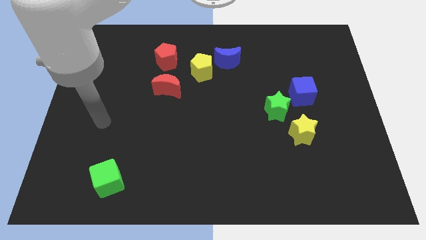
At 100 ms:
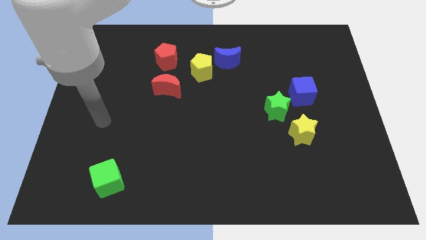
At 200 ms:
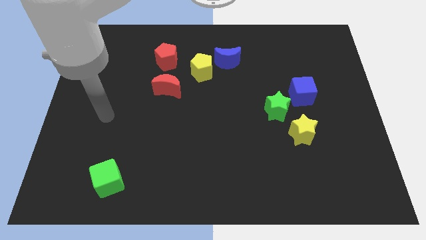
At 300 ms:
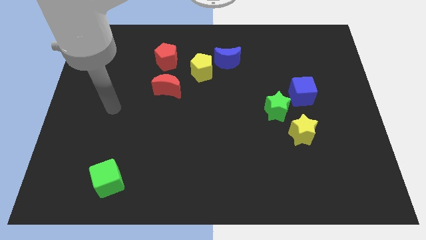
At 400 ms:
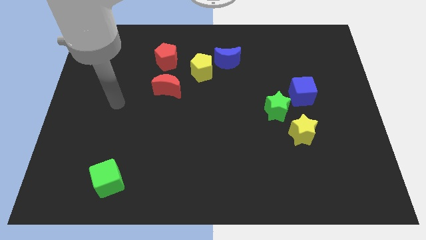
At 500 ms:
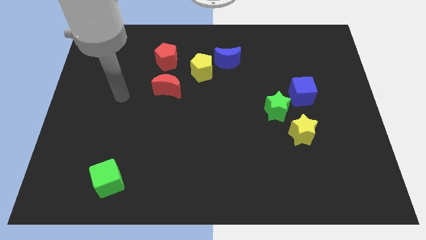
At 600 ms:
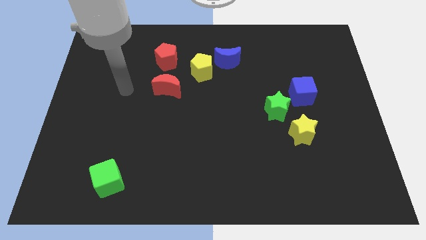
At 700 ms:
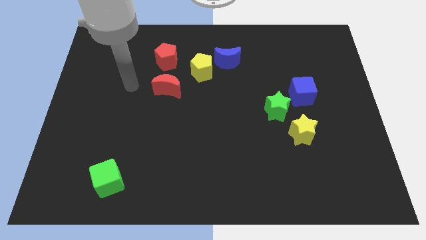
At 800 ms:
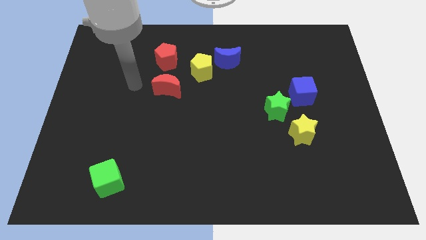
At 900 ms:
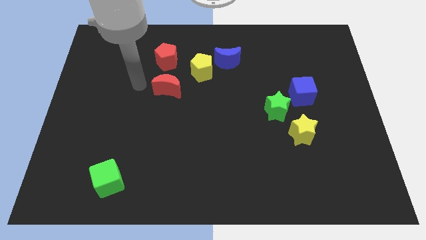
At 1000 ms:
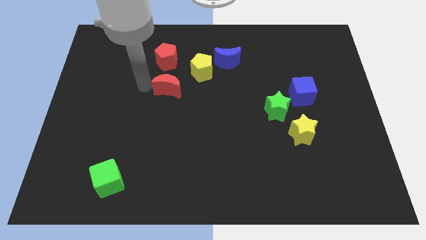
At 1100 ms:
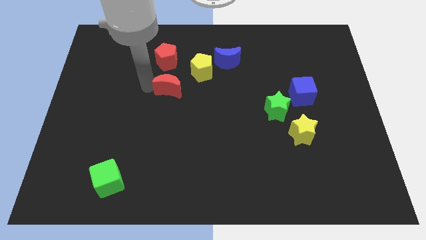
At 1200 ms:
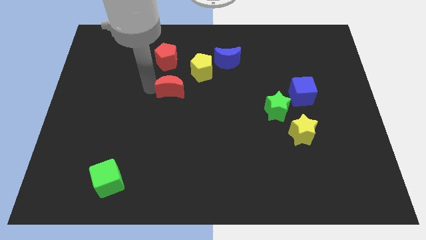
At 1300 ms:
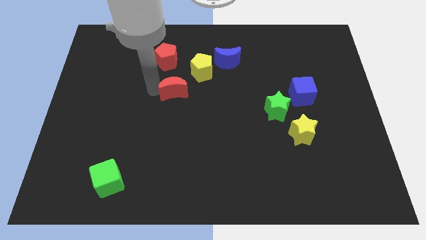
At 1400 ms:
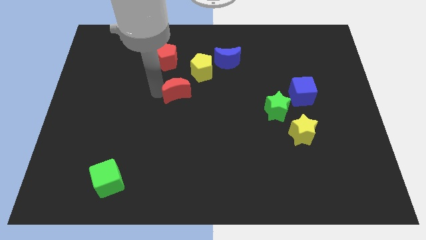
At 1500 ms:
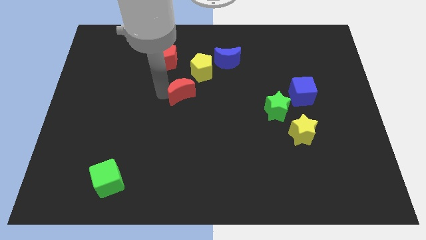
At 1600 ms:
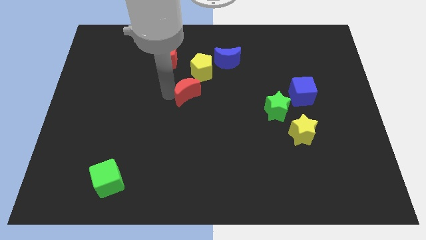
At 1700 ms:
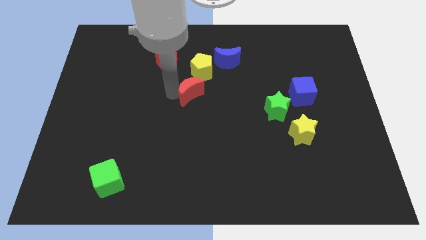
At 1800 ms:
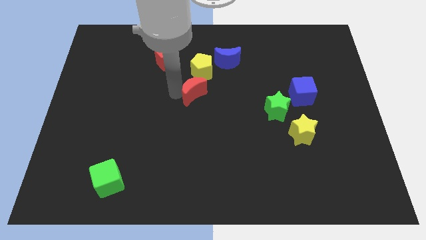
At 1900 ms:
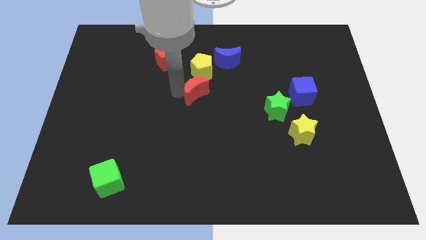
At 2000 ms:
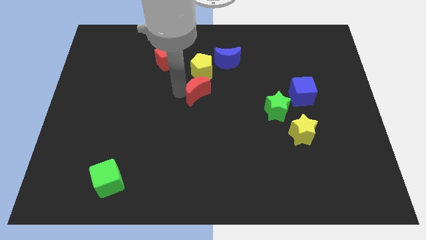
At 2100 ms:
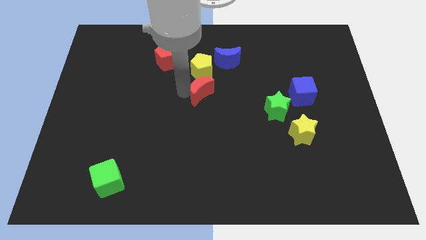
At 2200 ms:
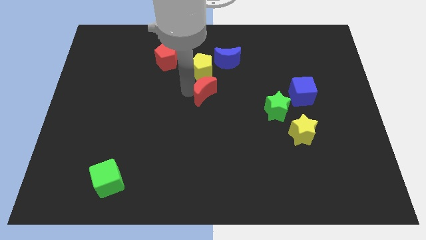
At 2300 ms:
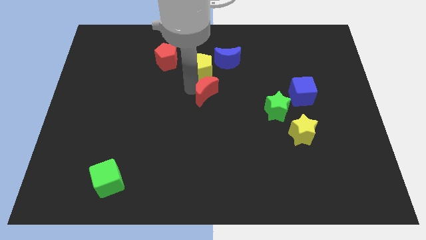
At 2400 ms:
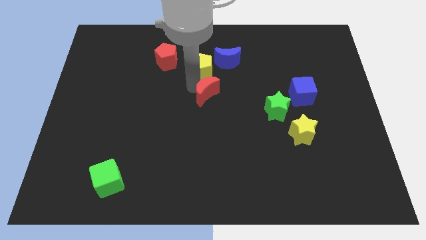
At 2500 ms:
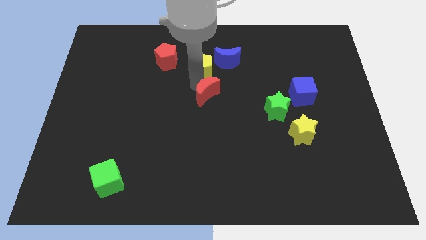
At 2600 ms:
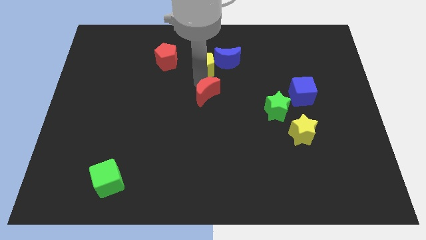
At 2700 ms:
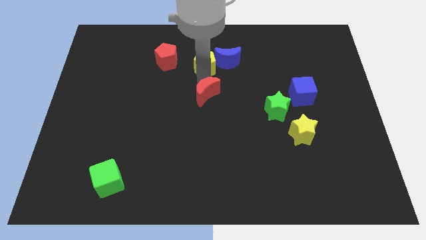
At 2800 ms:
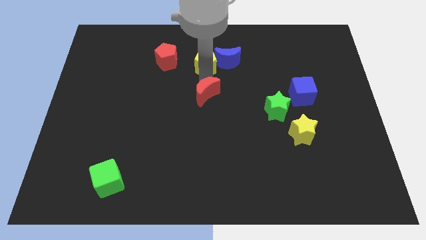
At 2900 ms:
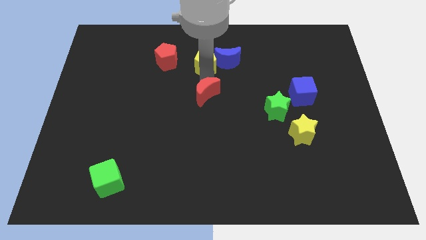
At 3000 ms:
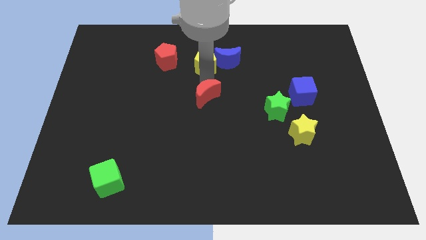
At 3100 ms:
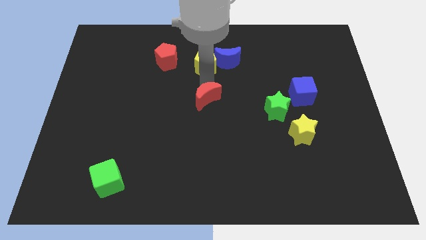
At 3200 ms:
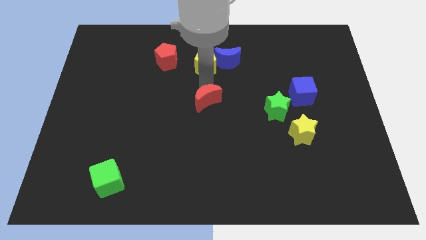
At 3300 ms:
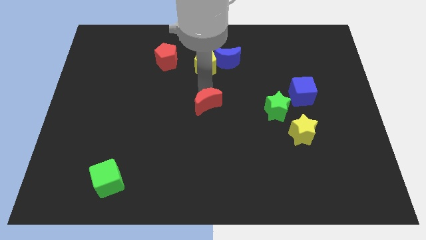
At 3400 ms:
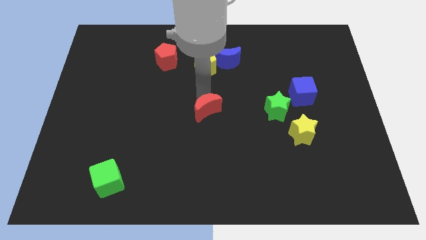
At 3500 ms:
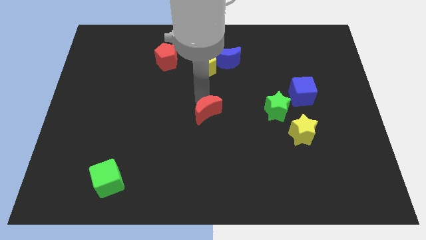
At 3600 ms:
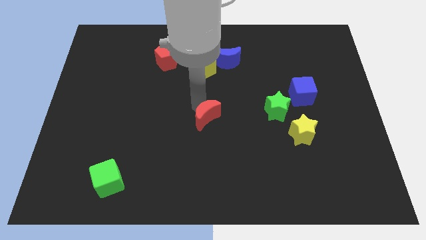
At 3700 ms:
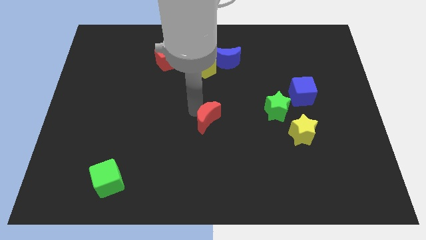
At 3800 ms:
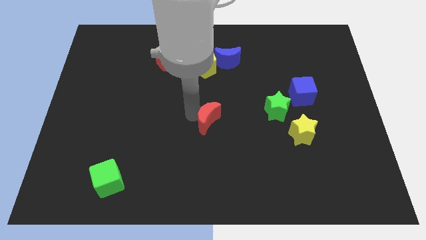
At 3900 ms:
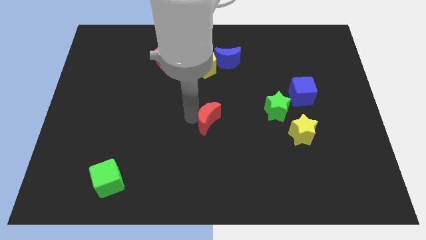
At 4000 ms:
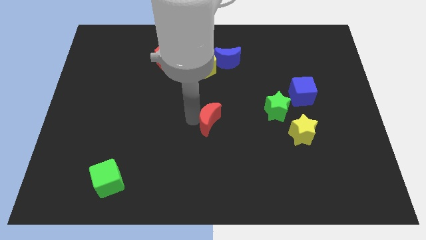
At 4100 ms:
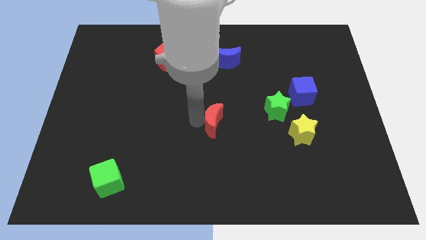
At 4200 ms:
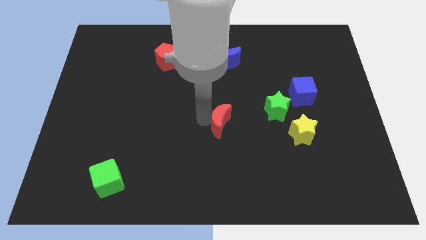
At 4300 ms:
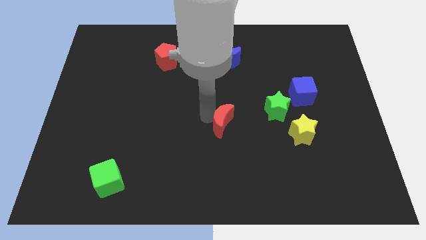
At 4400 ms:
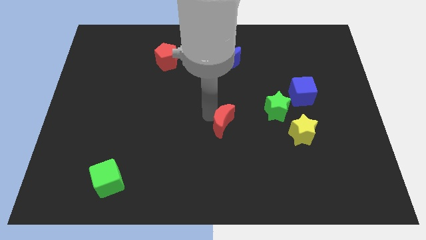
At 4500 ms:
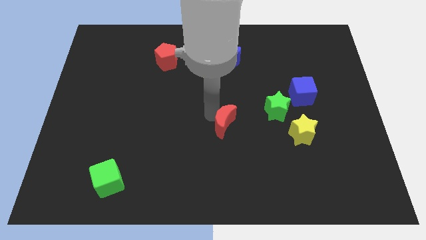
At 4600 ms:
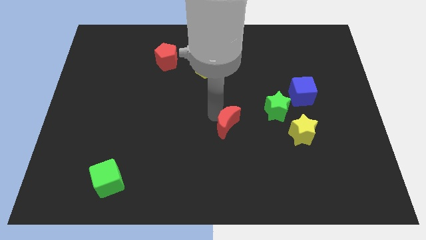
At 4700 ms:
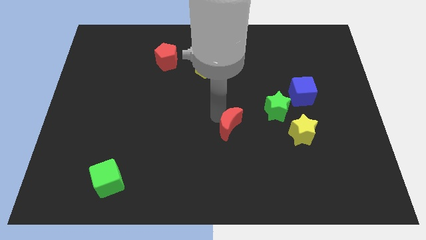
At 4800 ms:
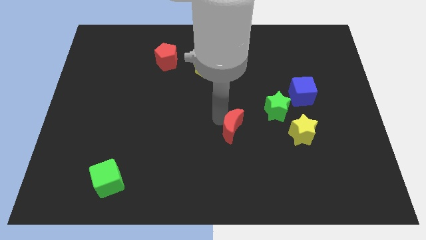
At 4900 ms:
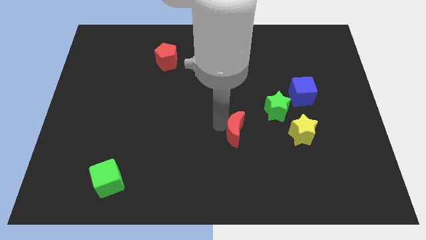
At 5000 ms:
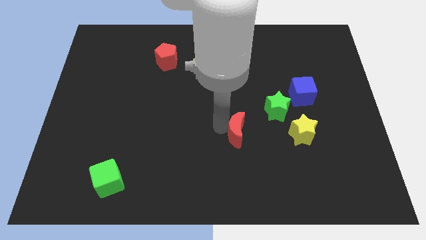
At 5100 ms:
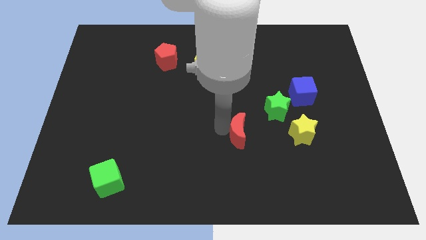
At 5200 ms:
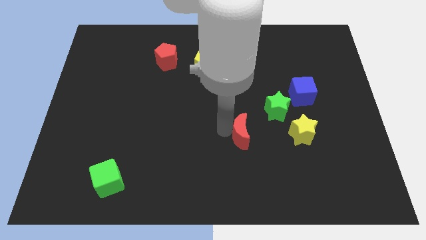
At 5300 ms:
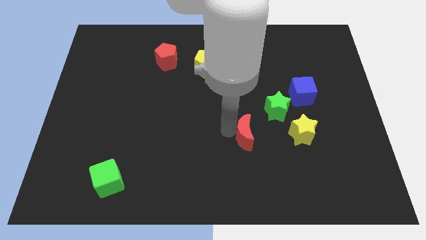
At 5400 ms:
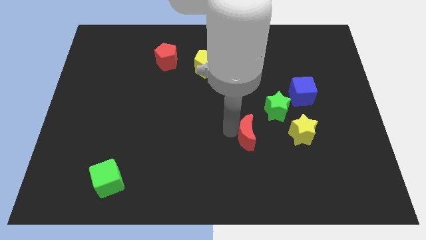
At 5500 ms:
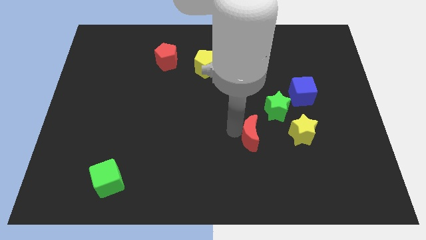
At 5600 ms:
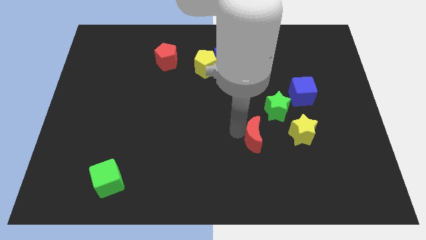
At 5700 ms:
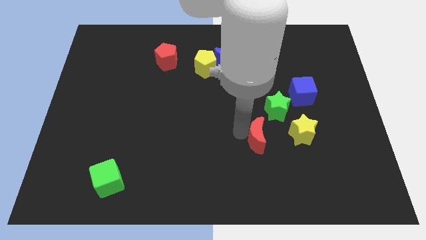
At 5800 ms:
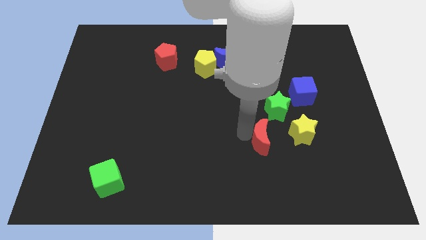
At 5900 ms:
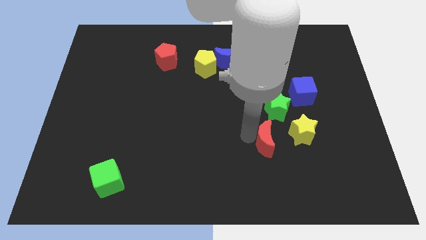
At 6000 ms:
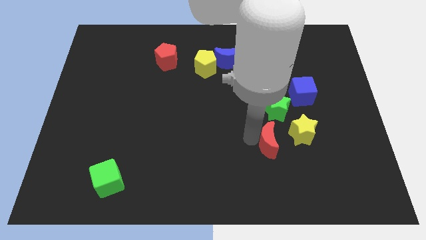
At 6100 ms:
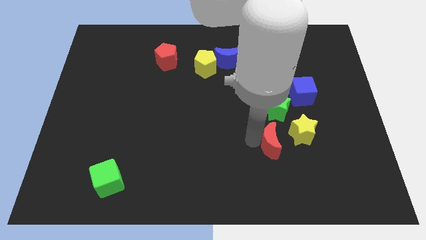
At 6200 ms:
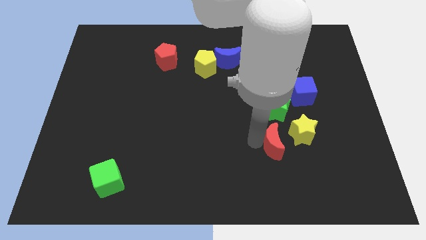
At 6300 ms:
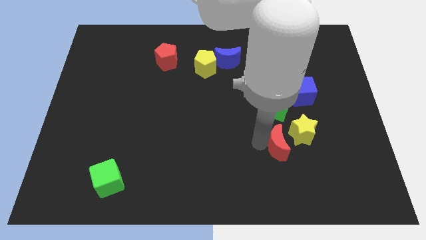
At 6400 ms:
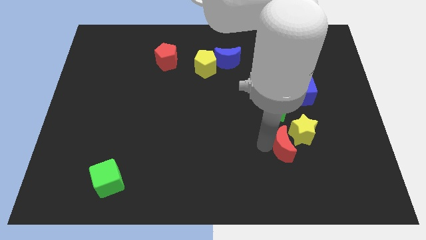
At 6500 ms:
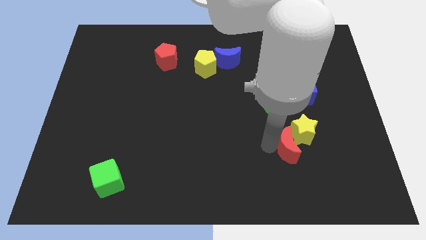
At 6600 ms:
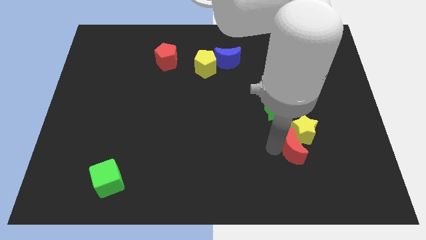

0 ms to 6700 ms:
move the red moon next to the yellow star

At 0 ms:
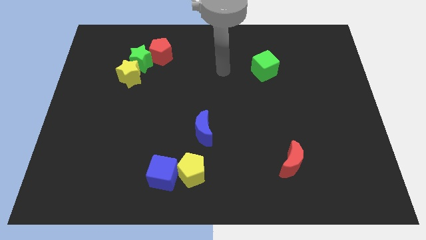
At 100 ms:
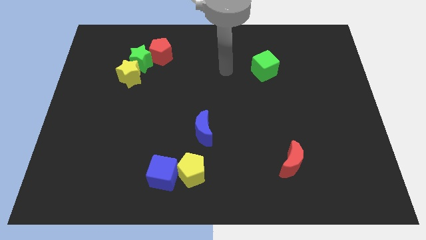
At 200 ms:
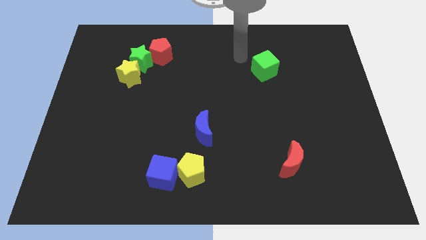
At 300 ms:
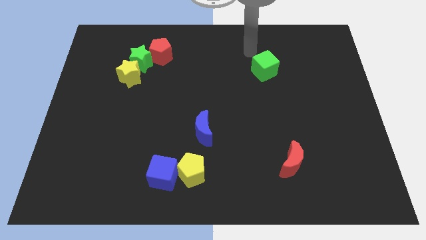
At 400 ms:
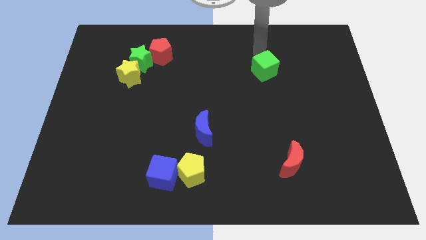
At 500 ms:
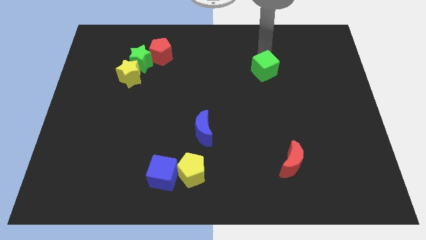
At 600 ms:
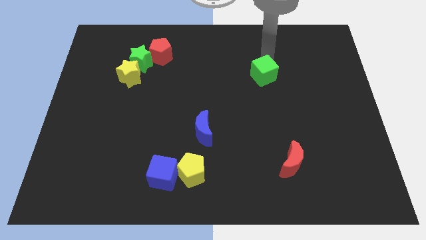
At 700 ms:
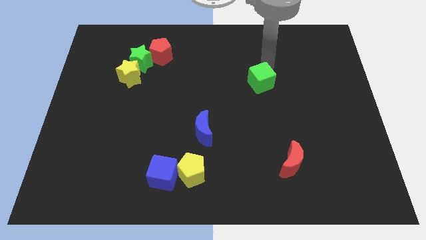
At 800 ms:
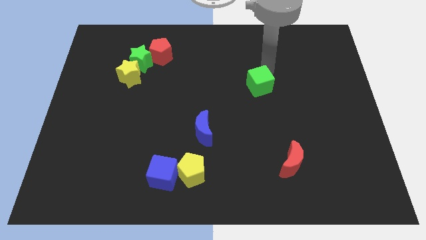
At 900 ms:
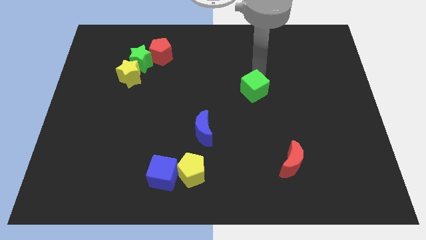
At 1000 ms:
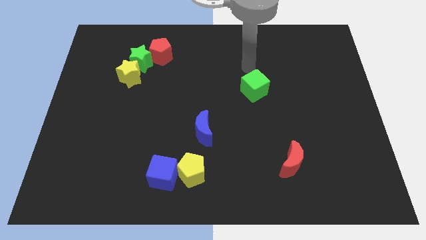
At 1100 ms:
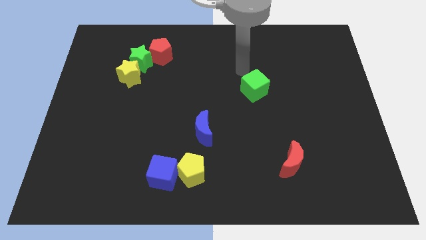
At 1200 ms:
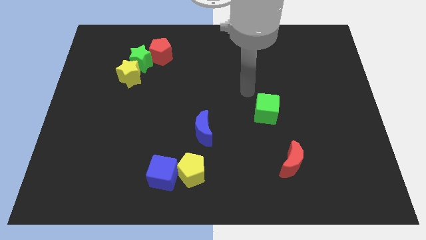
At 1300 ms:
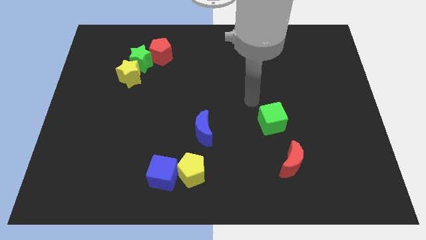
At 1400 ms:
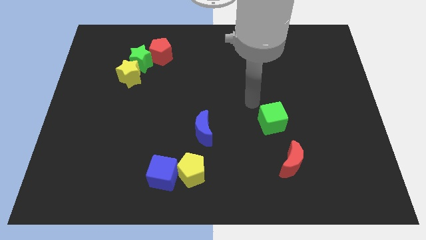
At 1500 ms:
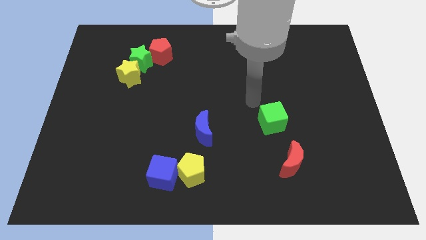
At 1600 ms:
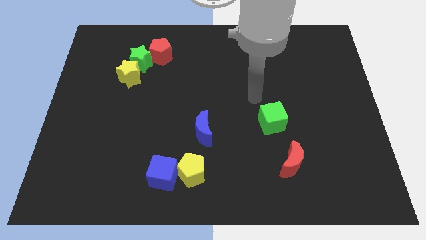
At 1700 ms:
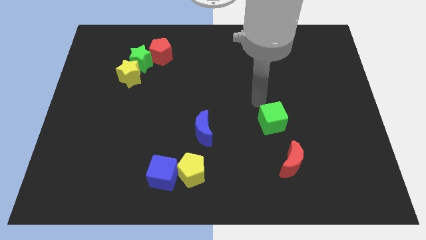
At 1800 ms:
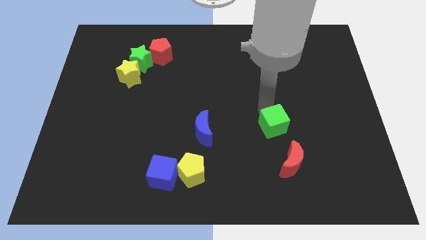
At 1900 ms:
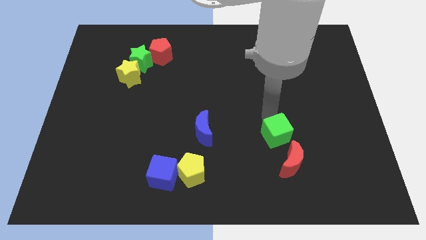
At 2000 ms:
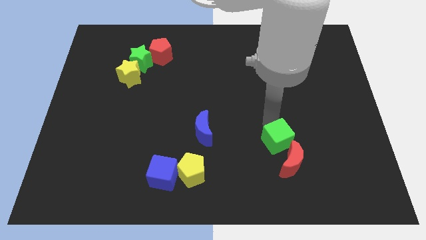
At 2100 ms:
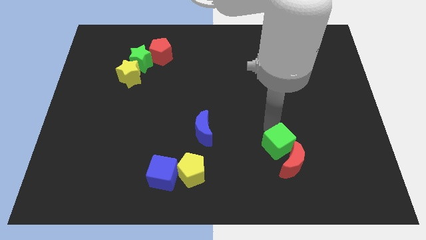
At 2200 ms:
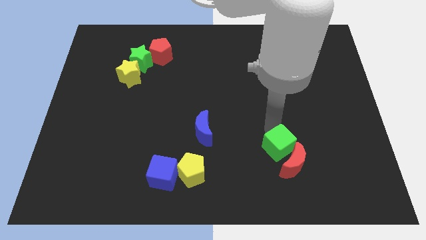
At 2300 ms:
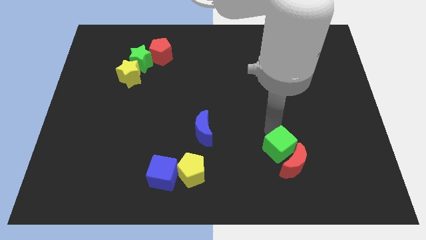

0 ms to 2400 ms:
push the green cube towards the red moon
